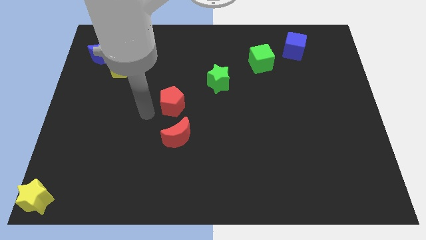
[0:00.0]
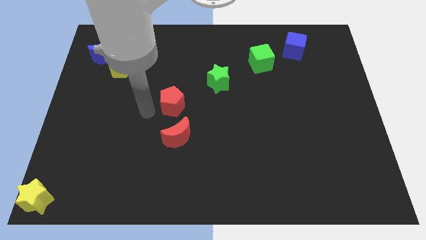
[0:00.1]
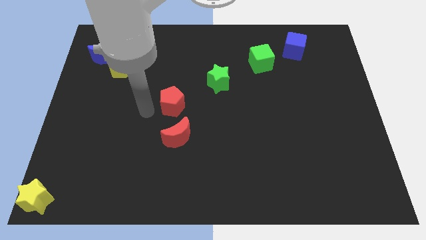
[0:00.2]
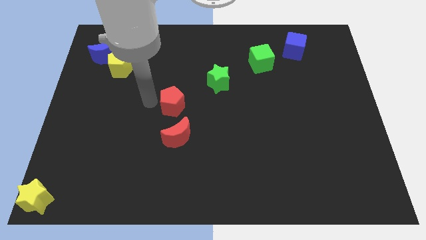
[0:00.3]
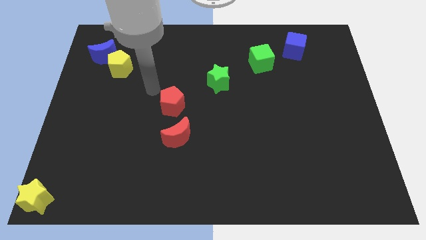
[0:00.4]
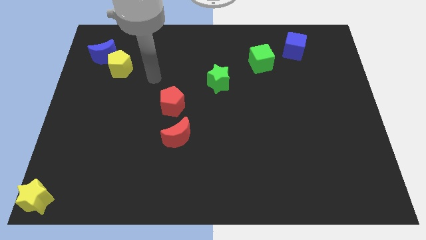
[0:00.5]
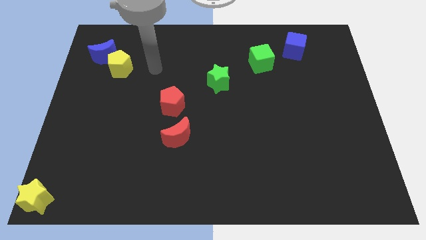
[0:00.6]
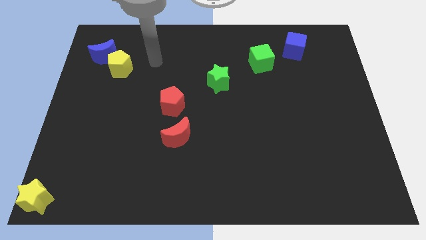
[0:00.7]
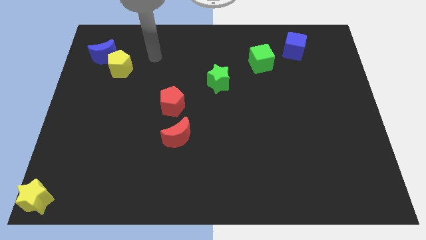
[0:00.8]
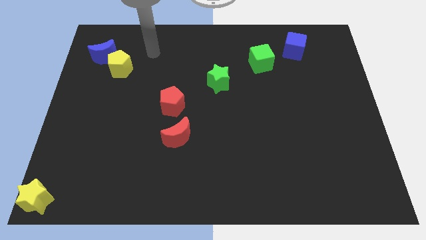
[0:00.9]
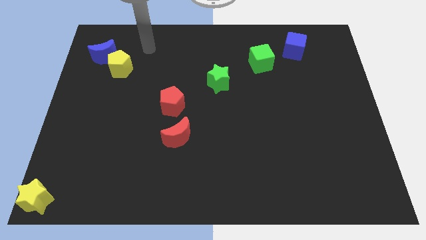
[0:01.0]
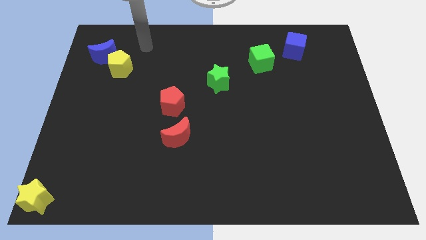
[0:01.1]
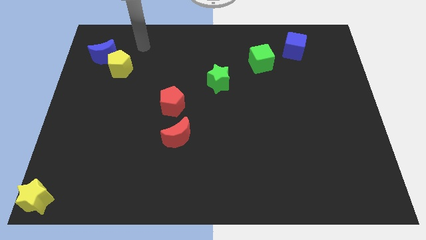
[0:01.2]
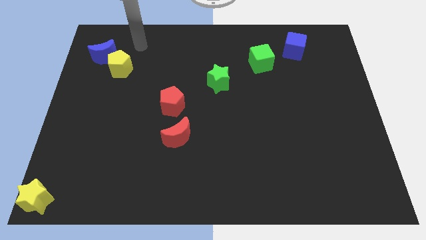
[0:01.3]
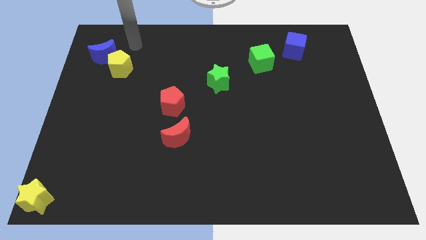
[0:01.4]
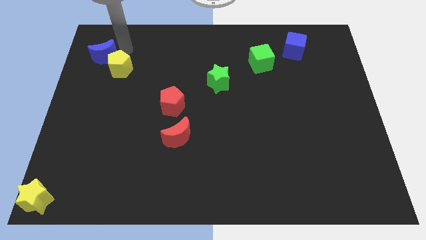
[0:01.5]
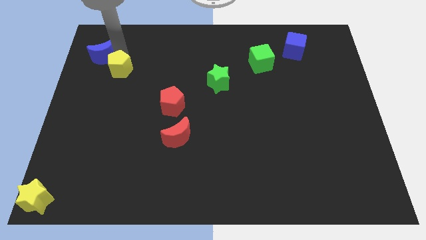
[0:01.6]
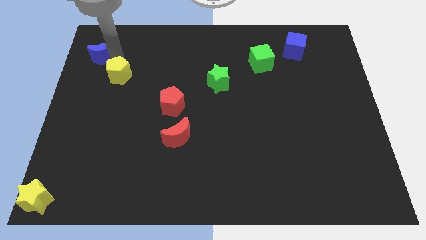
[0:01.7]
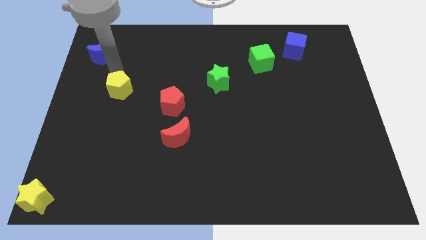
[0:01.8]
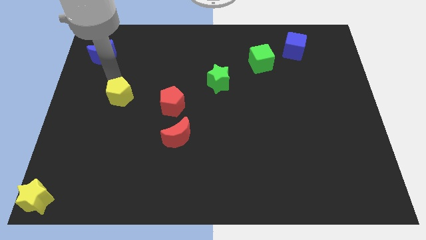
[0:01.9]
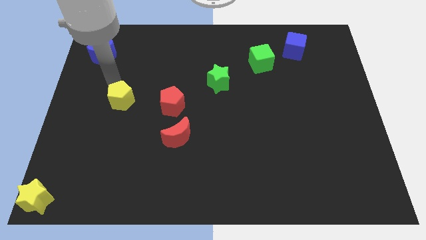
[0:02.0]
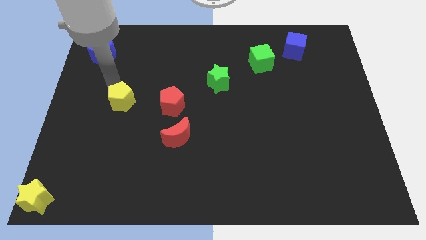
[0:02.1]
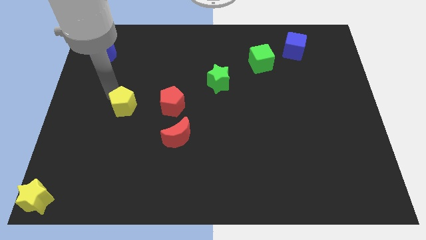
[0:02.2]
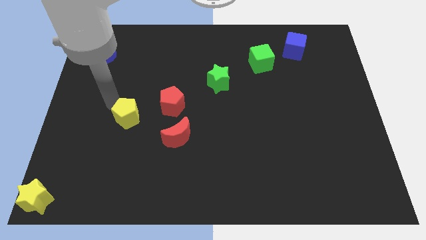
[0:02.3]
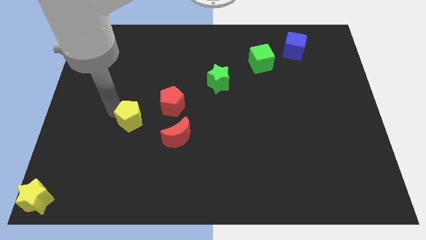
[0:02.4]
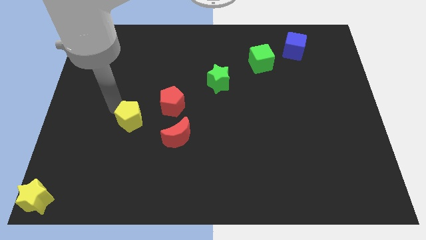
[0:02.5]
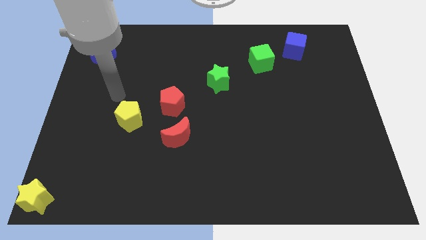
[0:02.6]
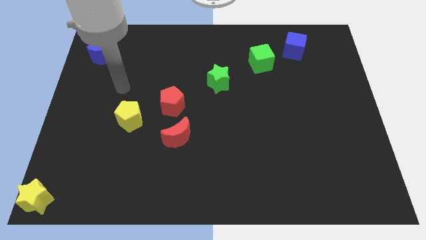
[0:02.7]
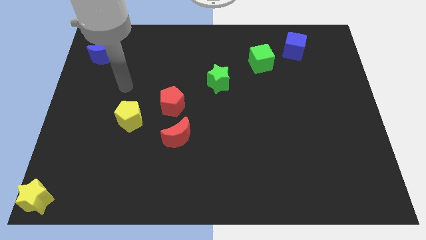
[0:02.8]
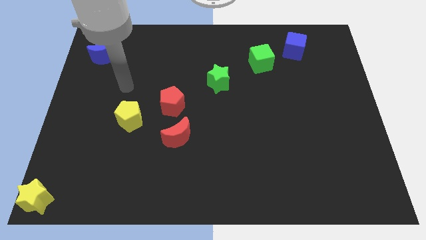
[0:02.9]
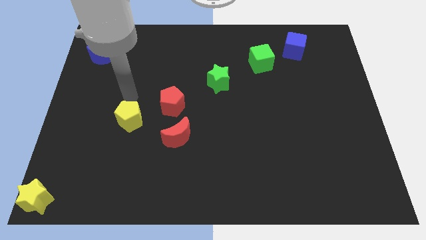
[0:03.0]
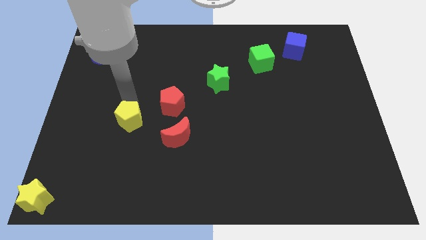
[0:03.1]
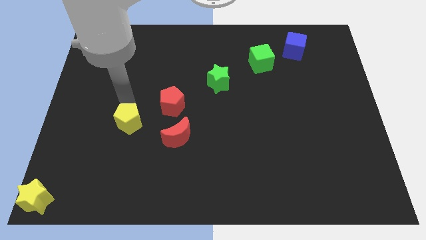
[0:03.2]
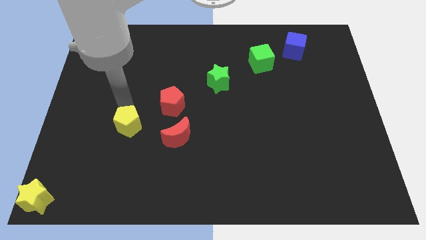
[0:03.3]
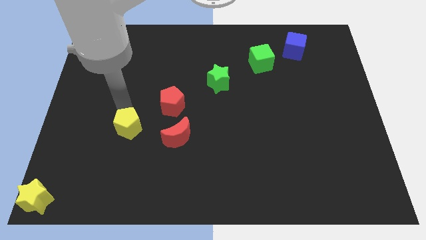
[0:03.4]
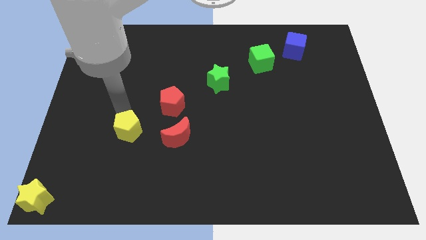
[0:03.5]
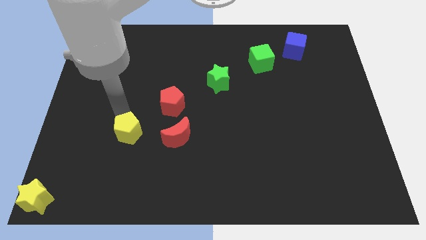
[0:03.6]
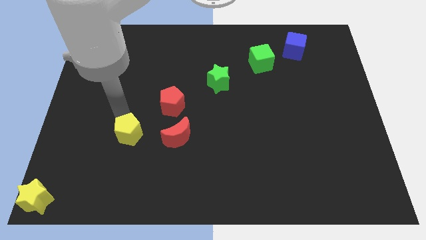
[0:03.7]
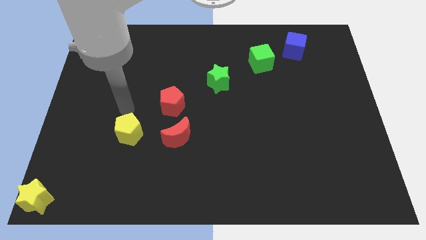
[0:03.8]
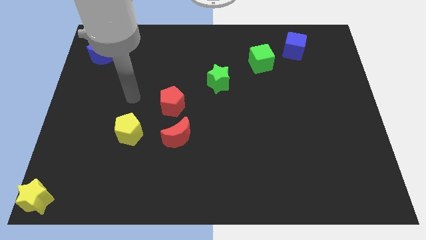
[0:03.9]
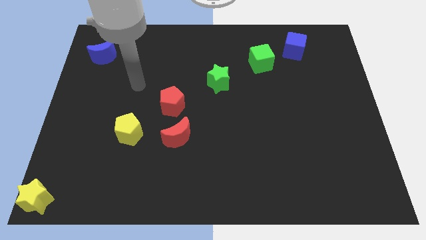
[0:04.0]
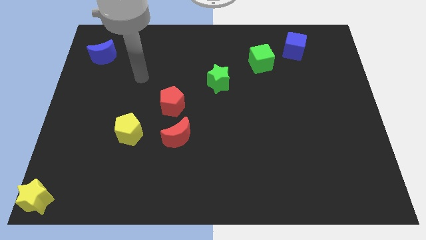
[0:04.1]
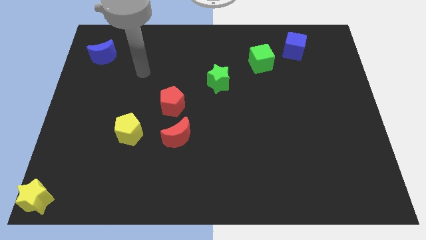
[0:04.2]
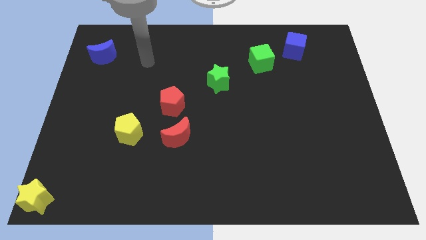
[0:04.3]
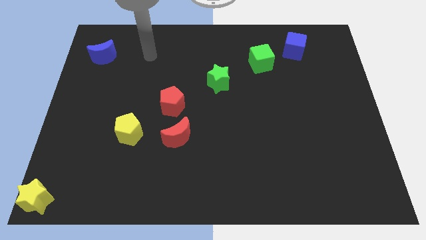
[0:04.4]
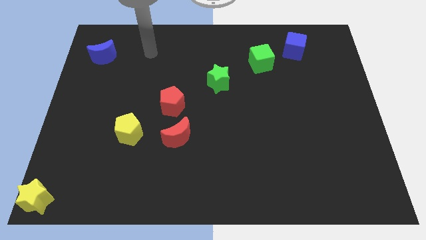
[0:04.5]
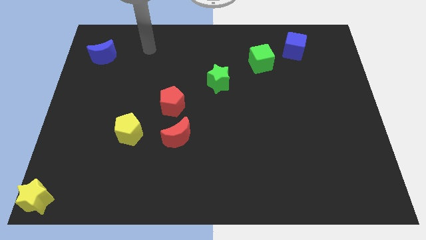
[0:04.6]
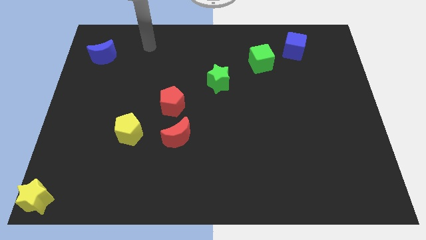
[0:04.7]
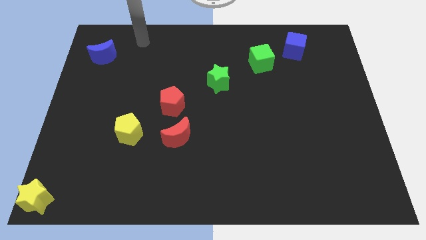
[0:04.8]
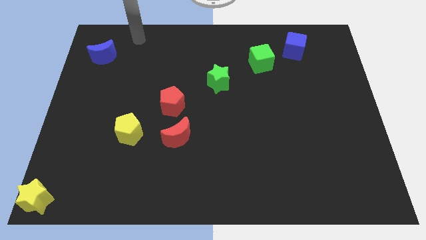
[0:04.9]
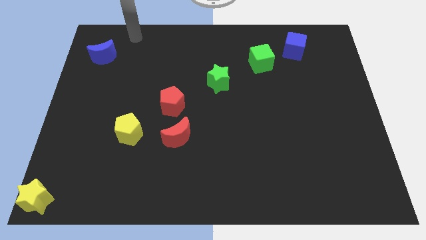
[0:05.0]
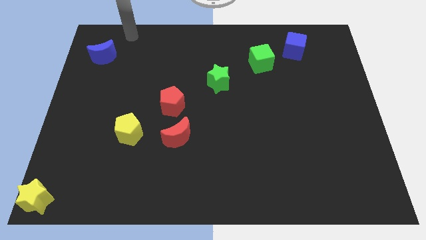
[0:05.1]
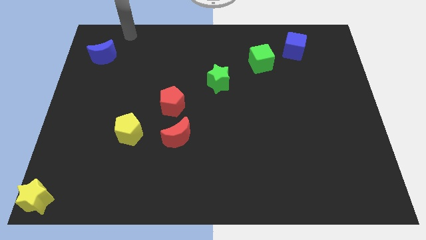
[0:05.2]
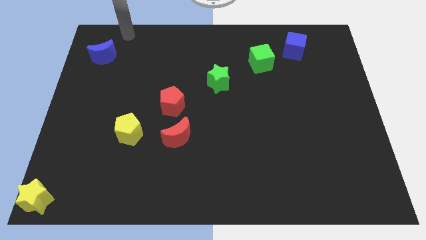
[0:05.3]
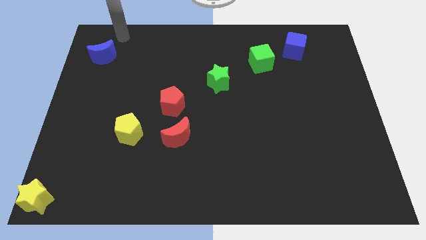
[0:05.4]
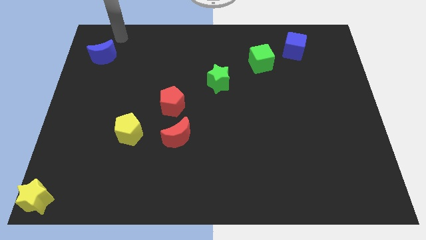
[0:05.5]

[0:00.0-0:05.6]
move the yellow pentagon to the bottom of the board

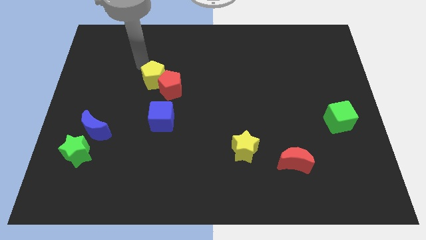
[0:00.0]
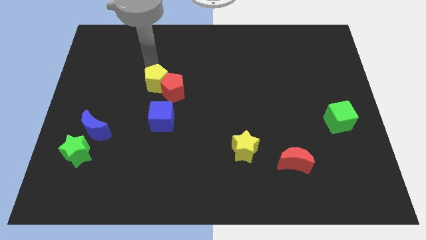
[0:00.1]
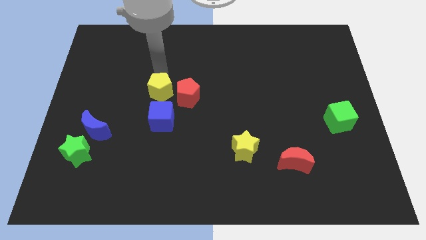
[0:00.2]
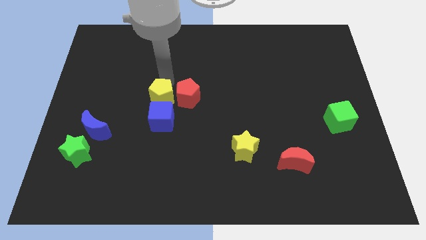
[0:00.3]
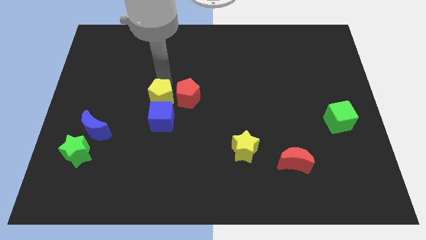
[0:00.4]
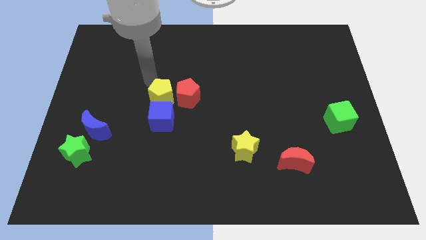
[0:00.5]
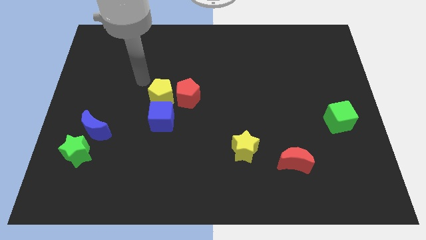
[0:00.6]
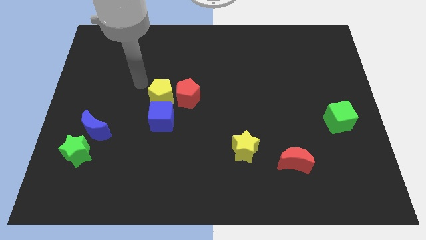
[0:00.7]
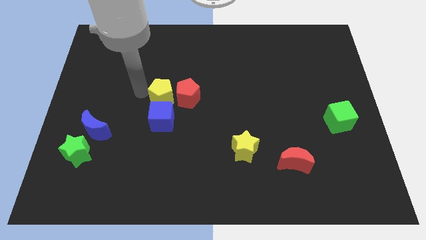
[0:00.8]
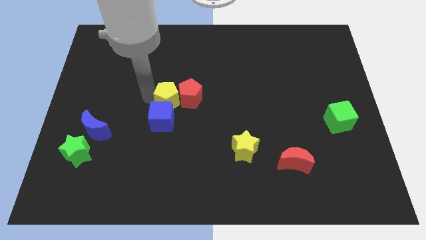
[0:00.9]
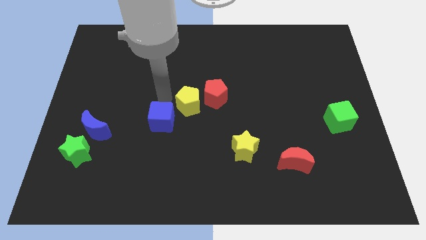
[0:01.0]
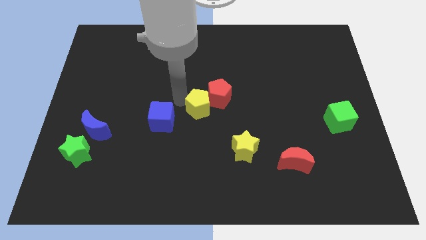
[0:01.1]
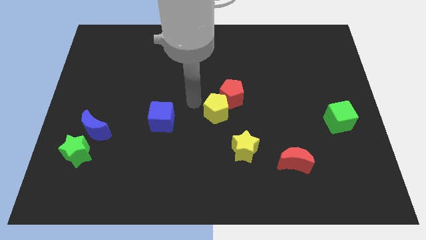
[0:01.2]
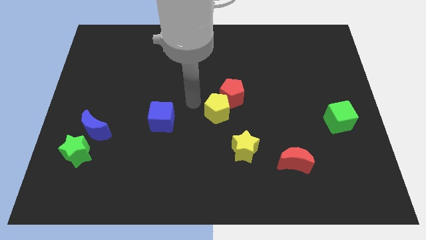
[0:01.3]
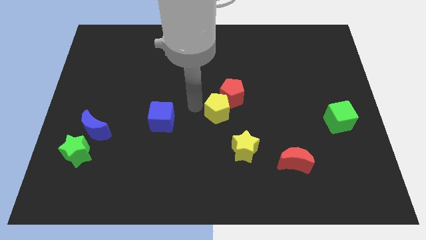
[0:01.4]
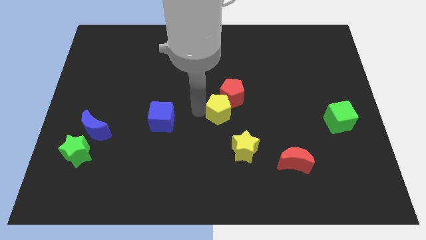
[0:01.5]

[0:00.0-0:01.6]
move the red and yellow pentagons to the center of the table

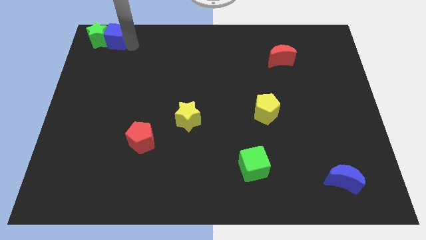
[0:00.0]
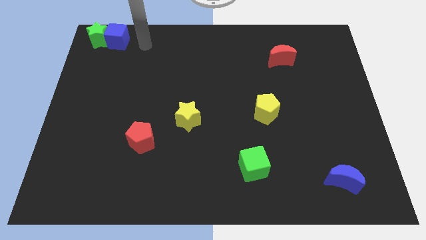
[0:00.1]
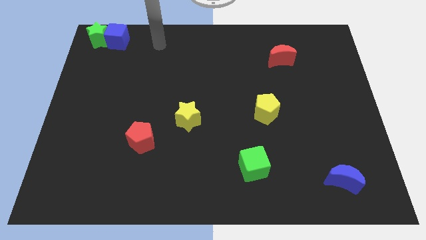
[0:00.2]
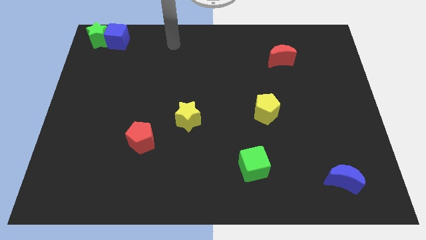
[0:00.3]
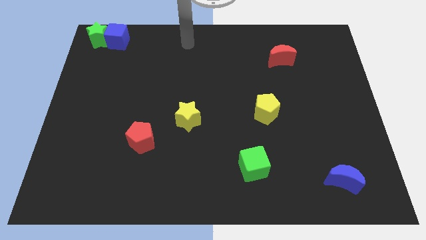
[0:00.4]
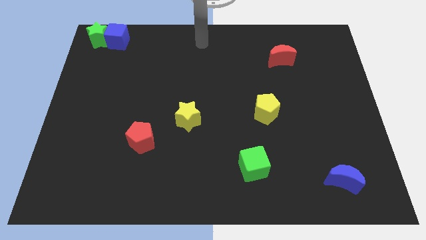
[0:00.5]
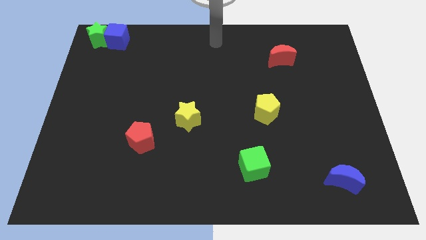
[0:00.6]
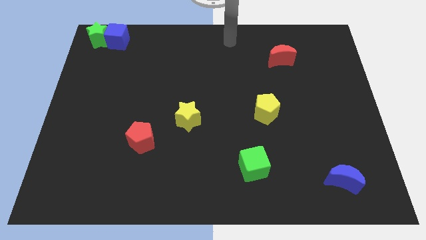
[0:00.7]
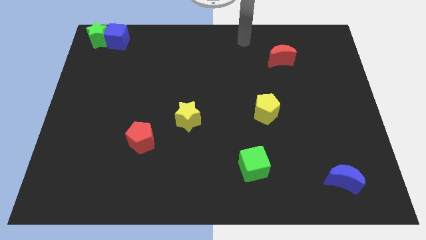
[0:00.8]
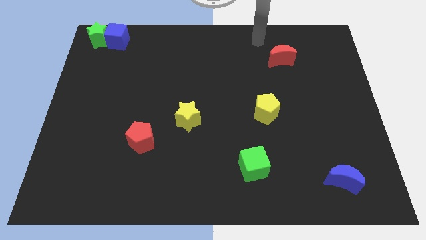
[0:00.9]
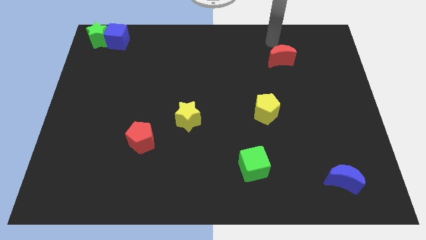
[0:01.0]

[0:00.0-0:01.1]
move your arm away from blue cube

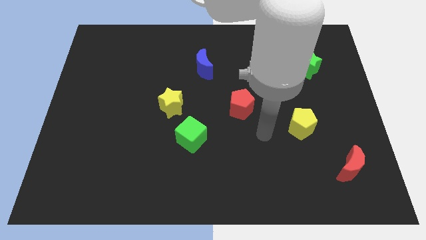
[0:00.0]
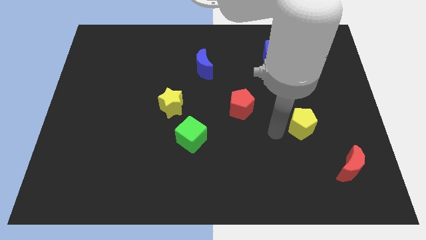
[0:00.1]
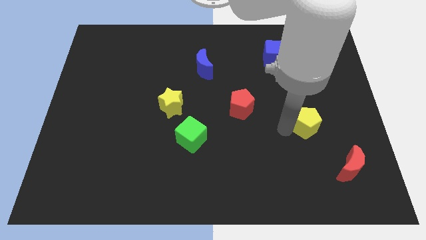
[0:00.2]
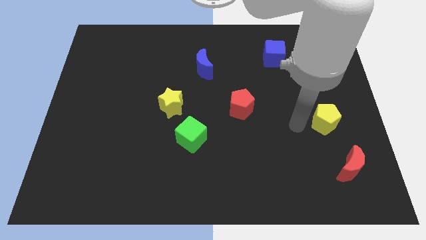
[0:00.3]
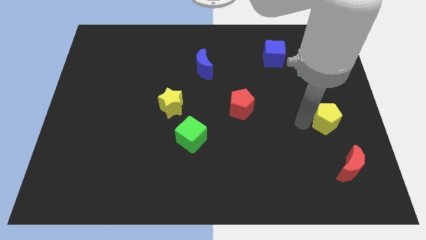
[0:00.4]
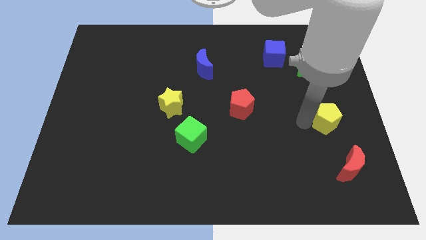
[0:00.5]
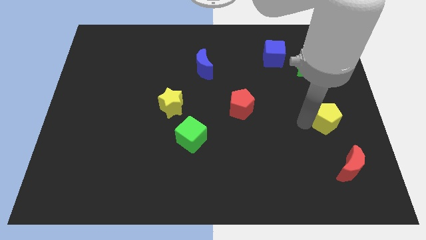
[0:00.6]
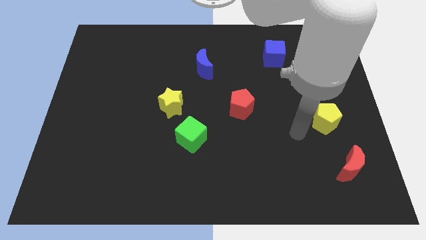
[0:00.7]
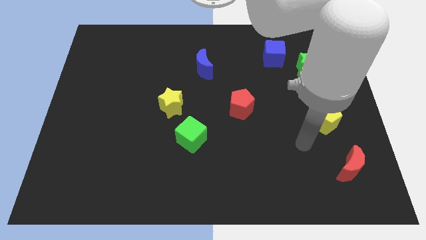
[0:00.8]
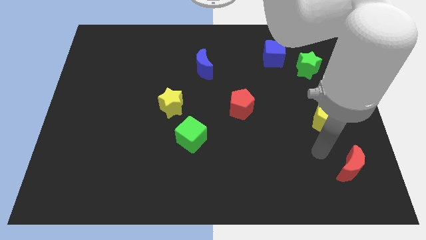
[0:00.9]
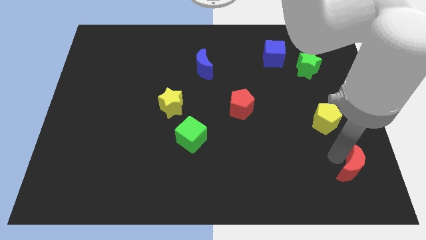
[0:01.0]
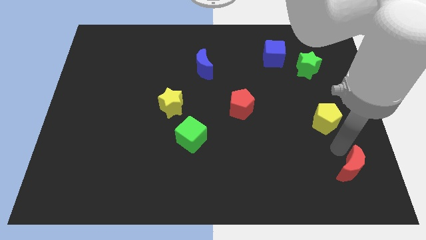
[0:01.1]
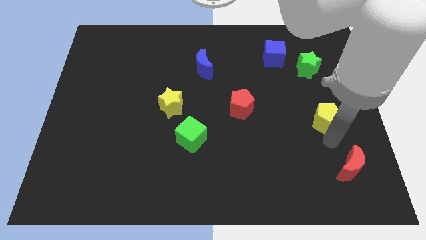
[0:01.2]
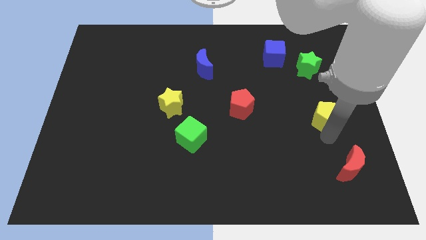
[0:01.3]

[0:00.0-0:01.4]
push the yellow pentagon to the right side of the board
